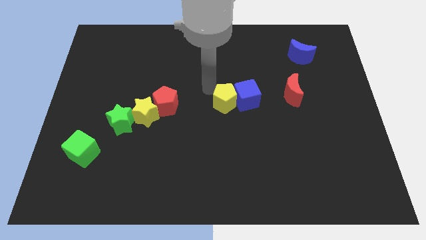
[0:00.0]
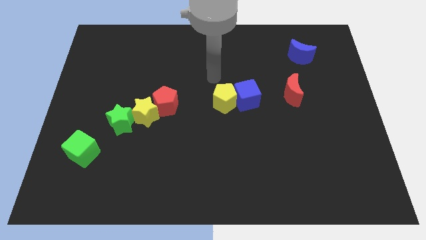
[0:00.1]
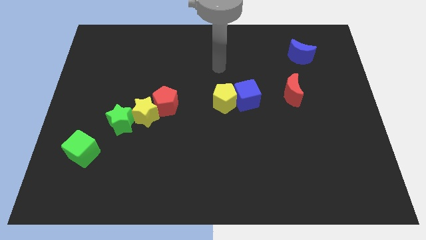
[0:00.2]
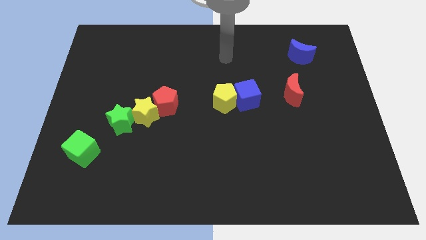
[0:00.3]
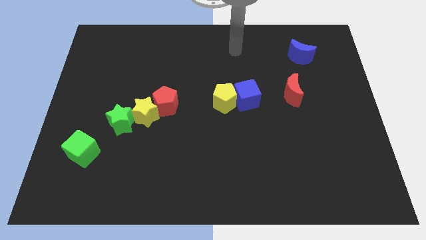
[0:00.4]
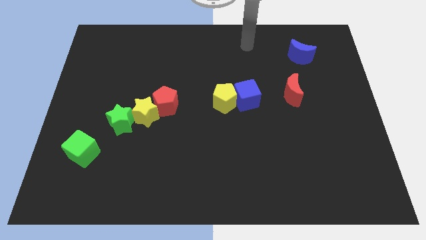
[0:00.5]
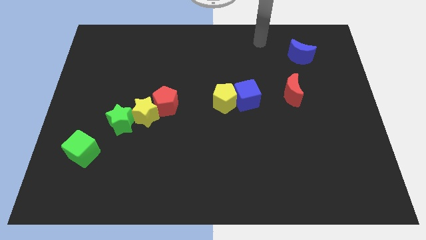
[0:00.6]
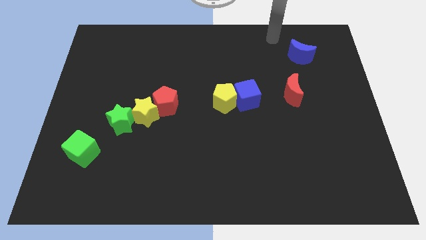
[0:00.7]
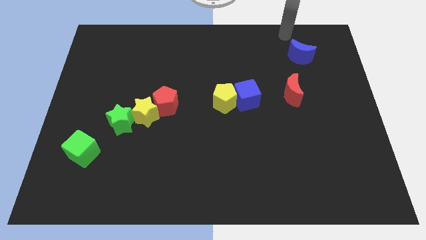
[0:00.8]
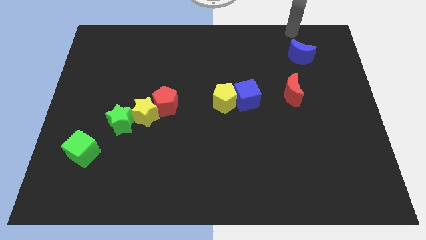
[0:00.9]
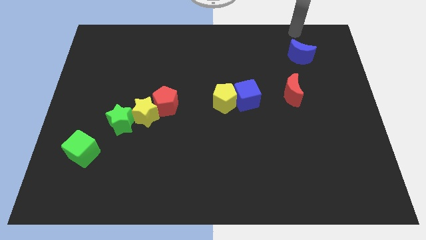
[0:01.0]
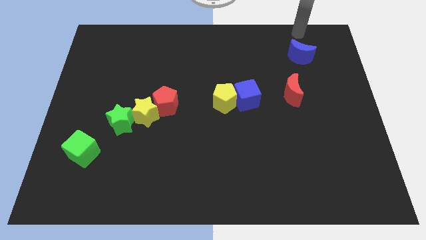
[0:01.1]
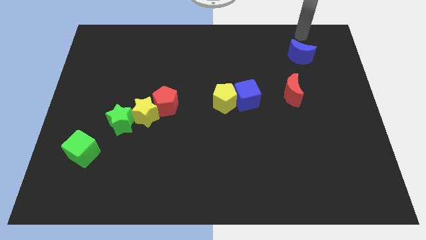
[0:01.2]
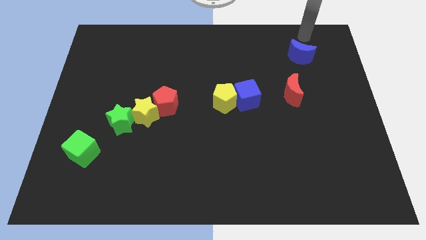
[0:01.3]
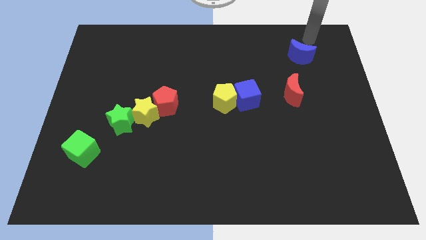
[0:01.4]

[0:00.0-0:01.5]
point your hand above the blue crescent

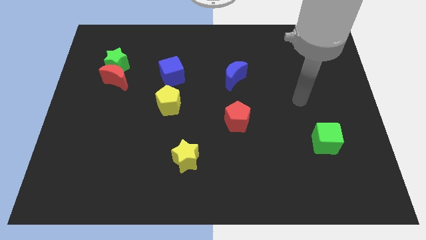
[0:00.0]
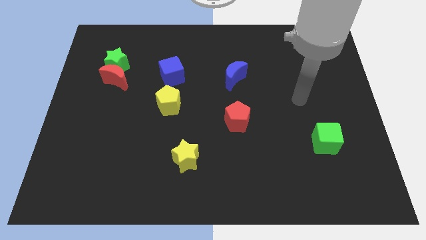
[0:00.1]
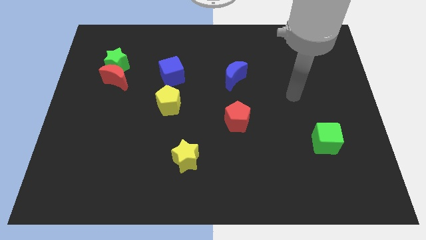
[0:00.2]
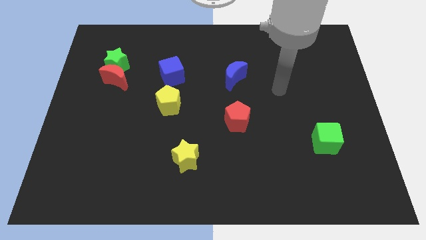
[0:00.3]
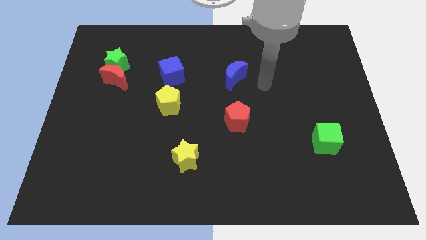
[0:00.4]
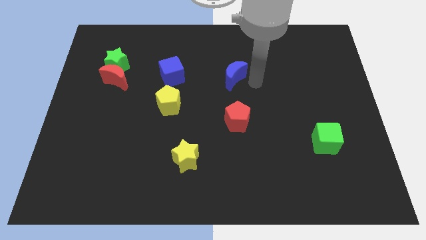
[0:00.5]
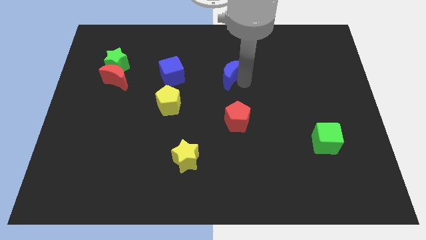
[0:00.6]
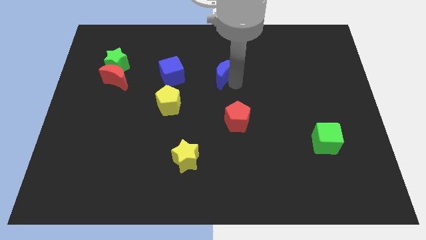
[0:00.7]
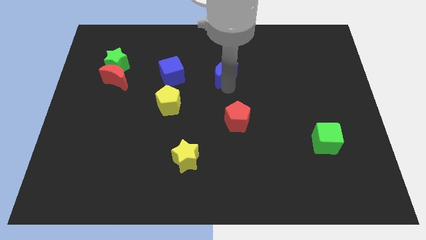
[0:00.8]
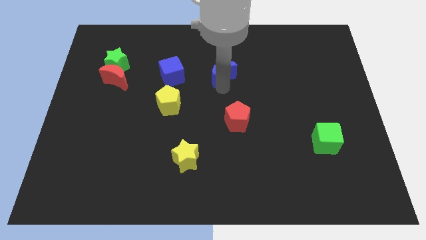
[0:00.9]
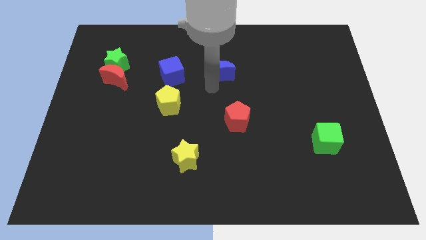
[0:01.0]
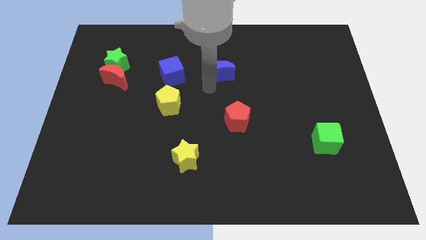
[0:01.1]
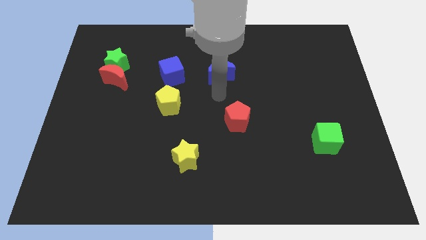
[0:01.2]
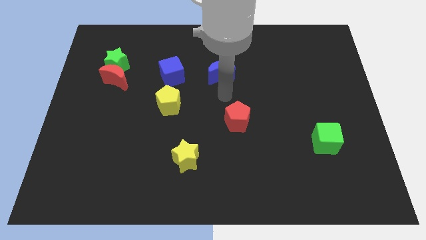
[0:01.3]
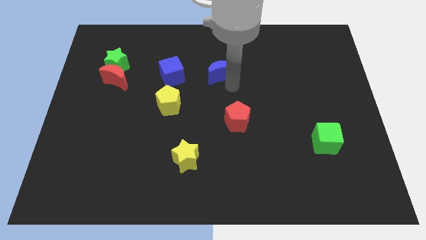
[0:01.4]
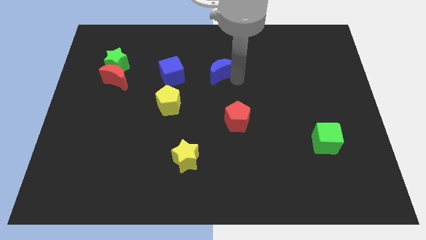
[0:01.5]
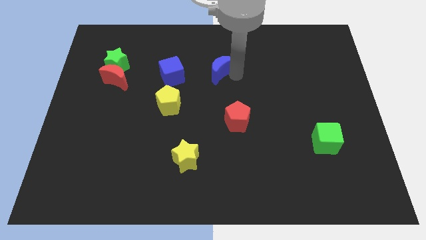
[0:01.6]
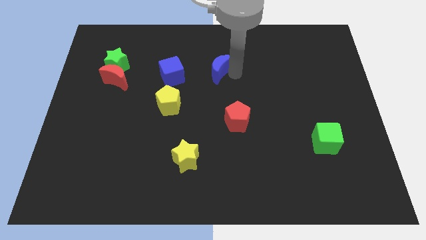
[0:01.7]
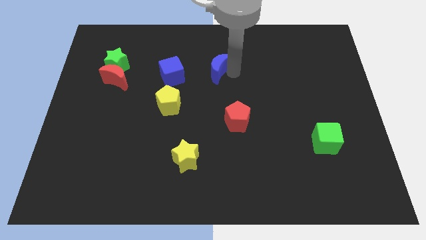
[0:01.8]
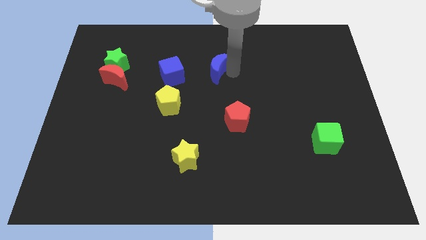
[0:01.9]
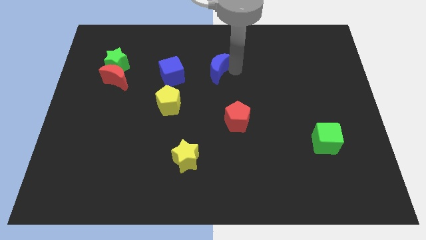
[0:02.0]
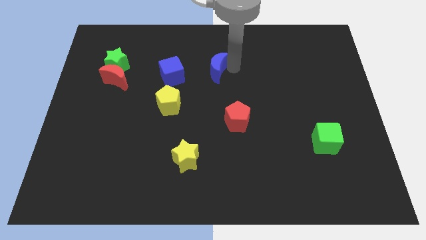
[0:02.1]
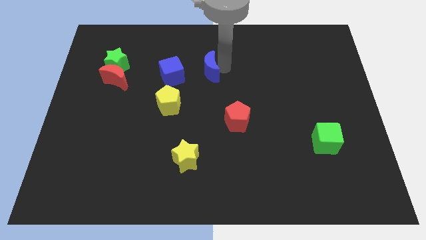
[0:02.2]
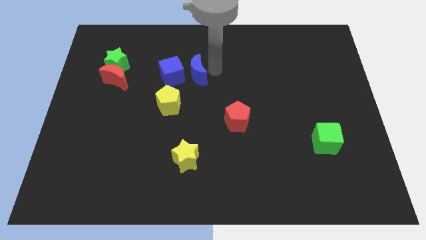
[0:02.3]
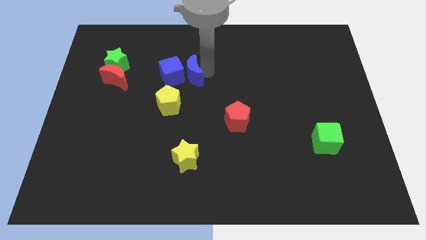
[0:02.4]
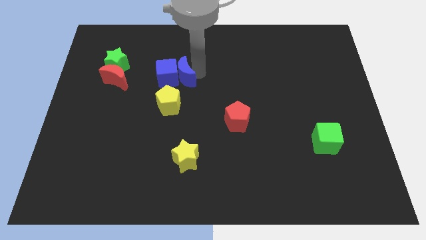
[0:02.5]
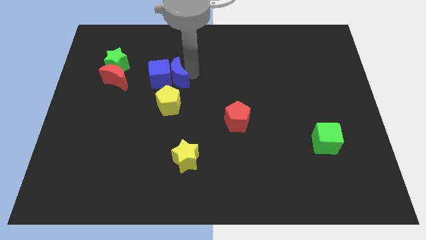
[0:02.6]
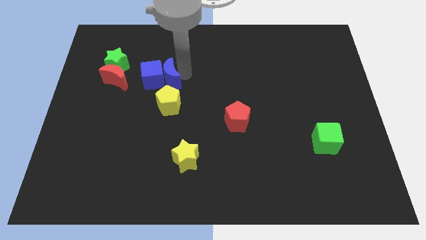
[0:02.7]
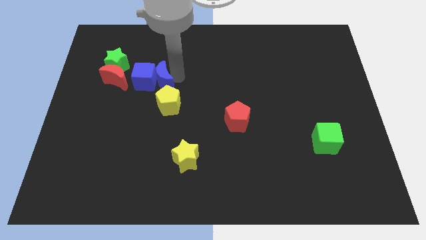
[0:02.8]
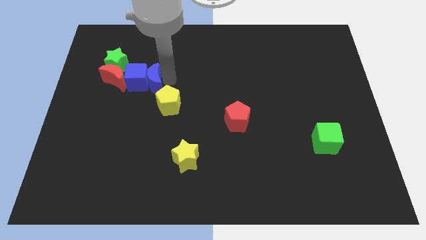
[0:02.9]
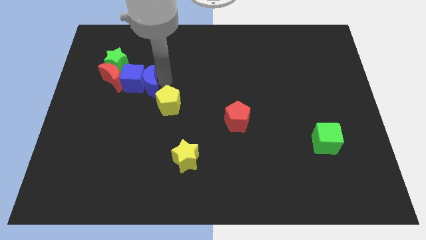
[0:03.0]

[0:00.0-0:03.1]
push the blue color blocks into the red crescent

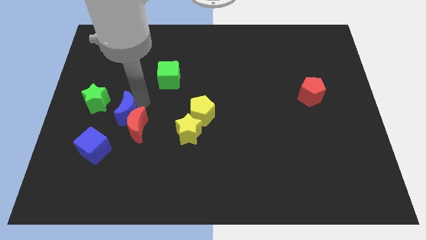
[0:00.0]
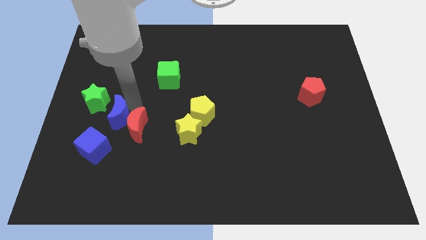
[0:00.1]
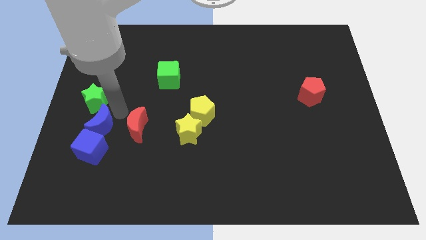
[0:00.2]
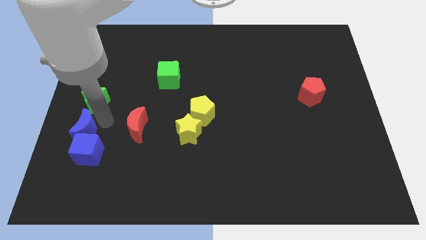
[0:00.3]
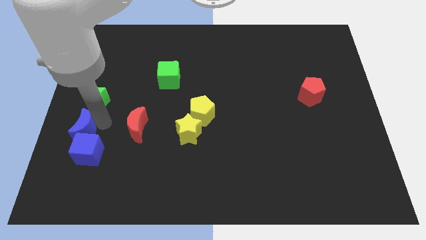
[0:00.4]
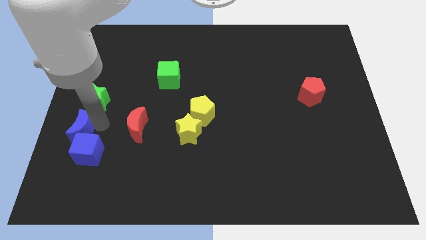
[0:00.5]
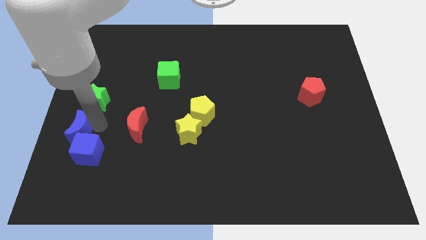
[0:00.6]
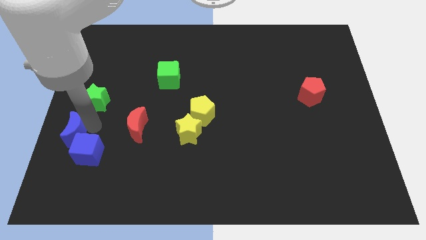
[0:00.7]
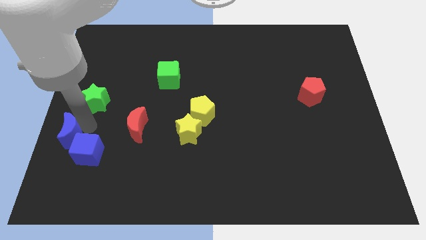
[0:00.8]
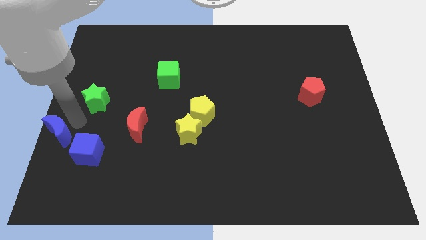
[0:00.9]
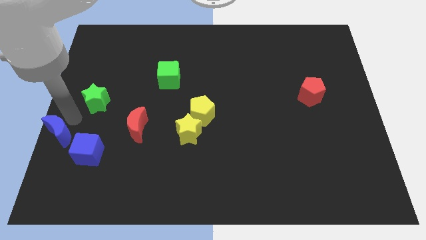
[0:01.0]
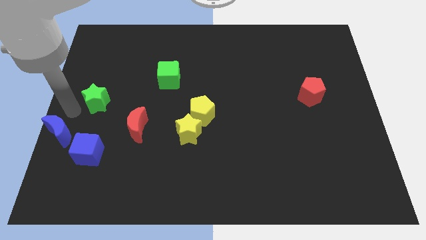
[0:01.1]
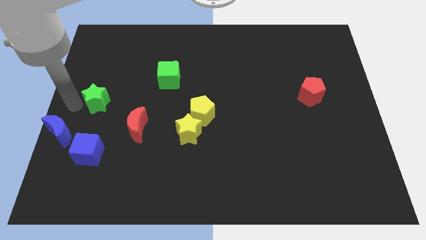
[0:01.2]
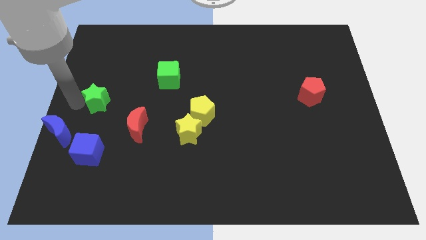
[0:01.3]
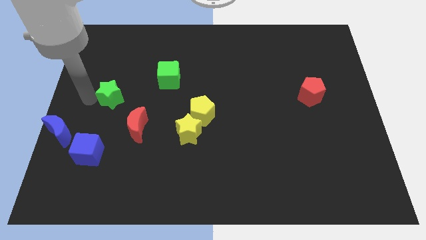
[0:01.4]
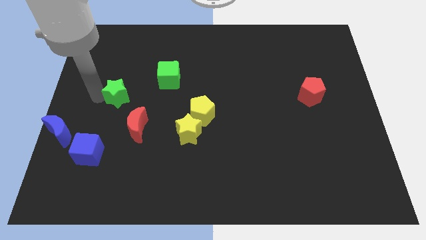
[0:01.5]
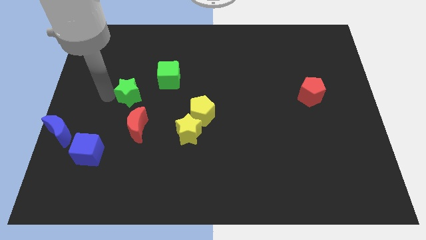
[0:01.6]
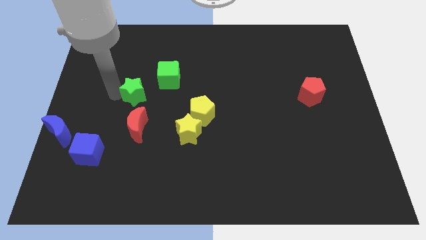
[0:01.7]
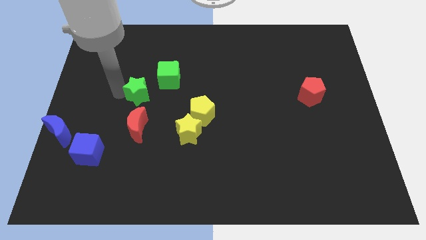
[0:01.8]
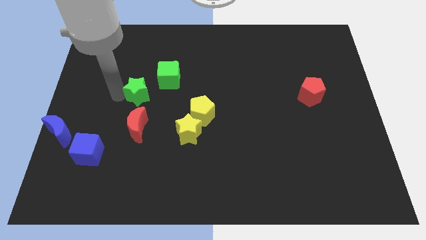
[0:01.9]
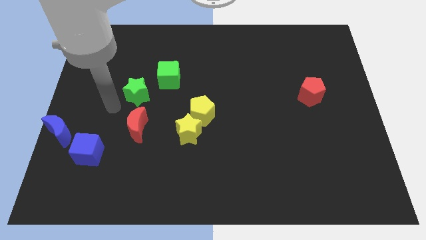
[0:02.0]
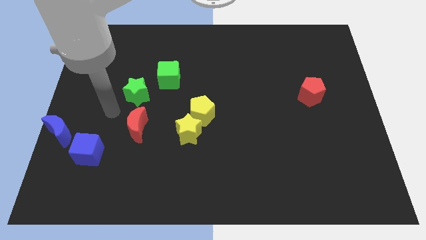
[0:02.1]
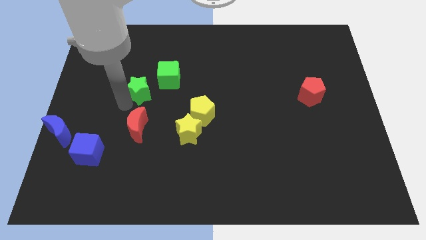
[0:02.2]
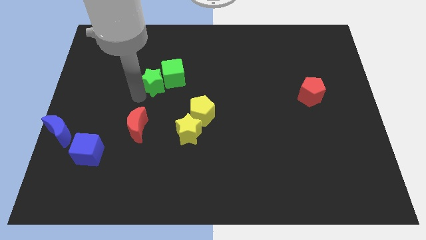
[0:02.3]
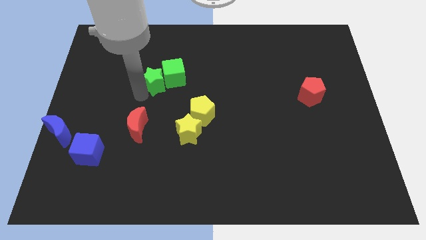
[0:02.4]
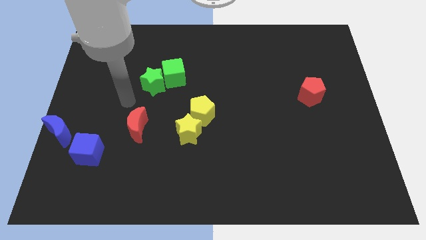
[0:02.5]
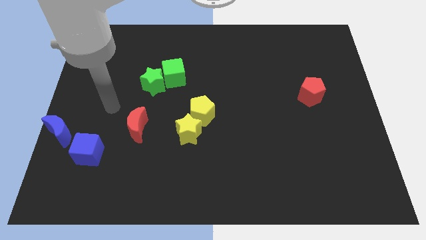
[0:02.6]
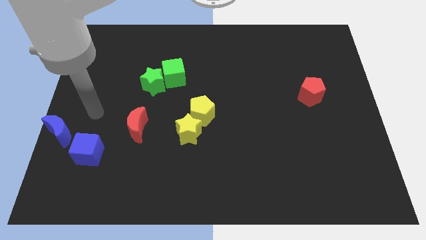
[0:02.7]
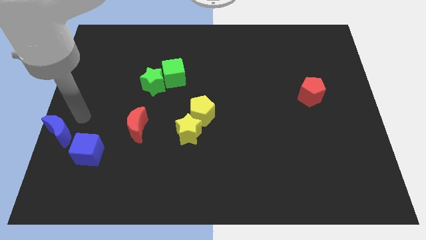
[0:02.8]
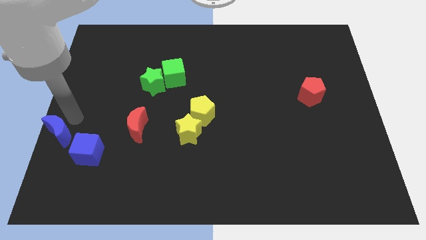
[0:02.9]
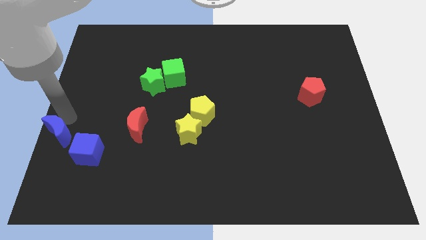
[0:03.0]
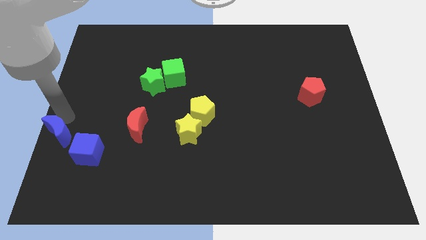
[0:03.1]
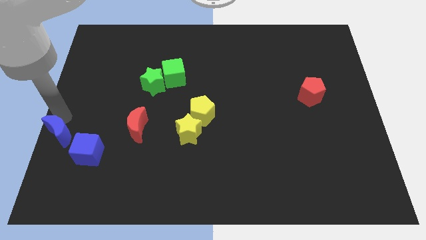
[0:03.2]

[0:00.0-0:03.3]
drag the green star into the green cube

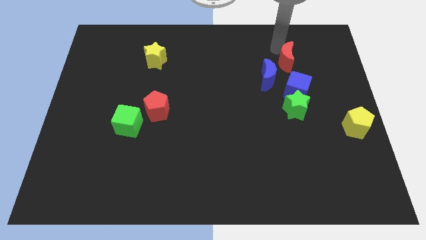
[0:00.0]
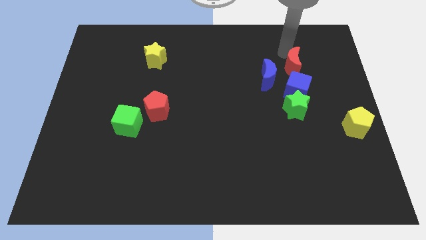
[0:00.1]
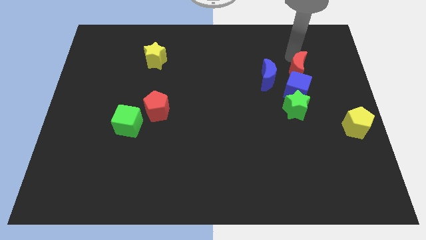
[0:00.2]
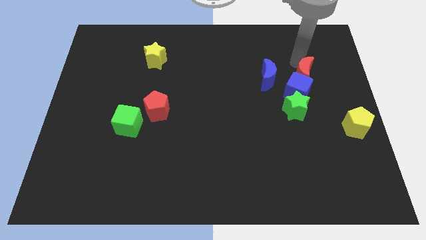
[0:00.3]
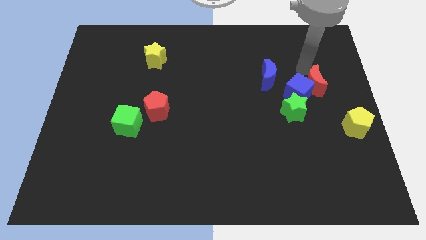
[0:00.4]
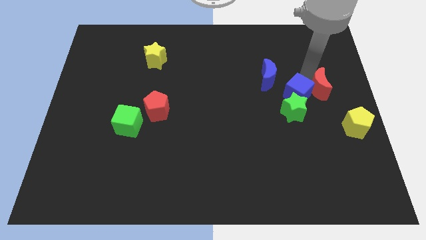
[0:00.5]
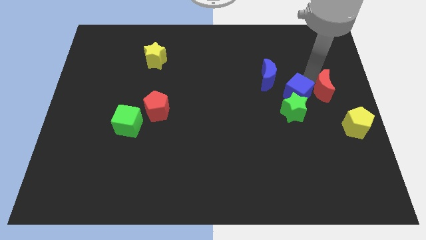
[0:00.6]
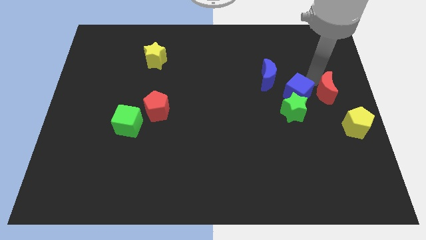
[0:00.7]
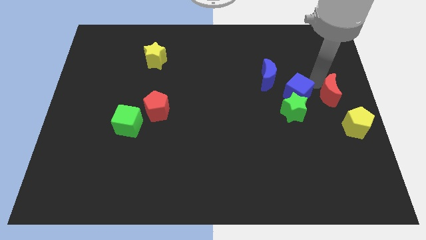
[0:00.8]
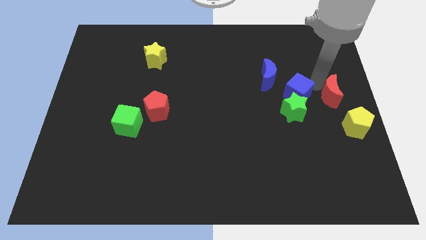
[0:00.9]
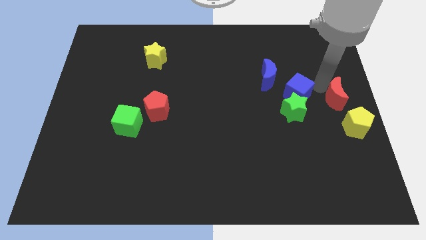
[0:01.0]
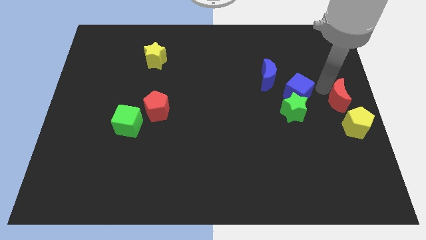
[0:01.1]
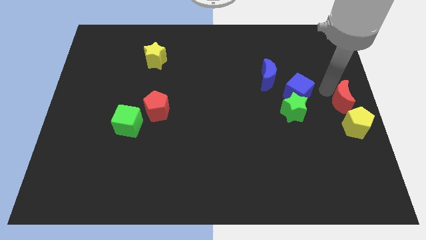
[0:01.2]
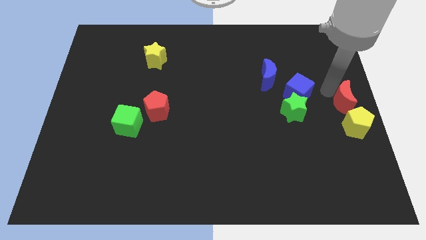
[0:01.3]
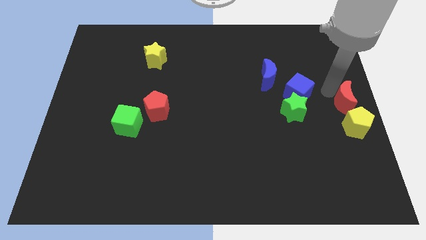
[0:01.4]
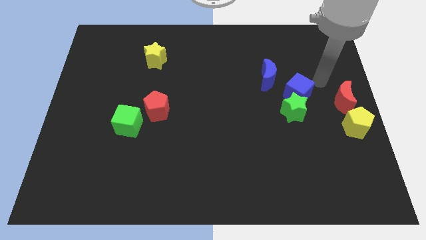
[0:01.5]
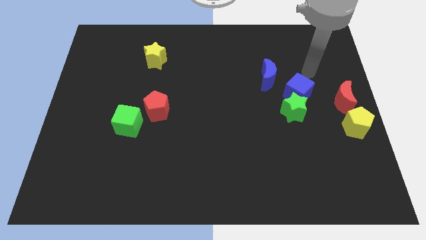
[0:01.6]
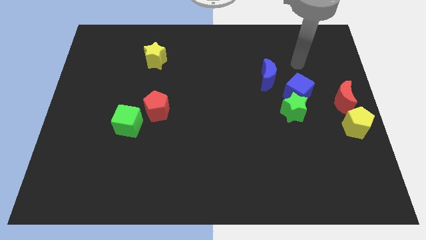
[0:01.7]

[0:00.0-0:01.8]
place the red crescent above the yellow pentagon
